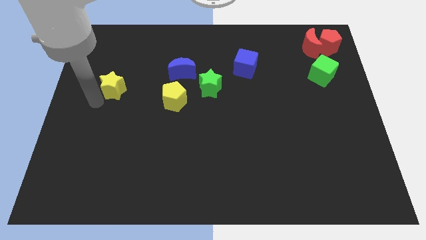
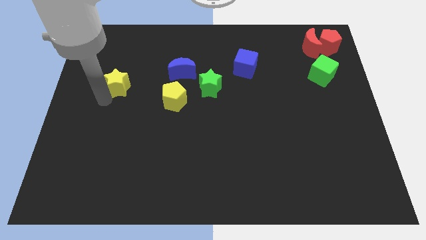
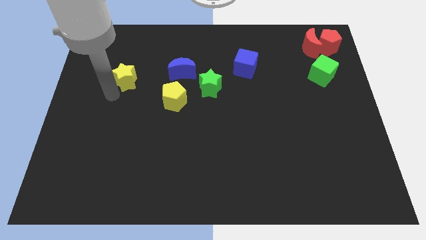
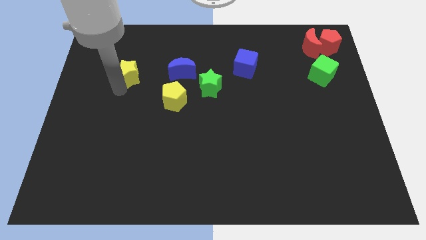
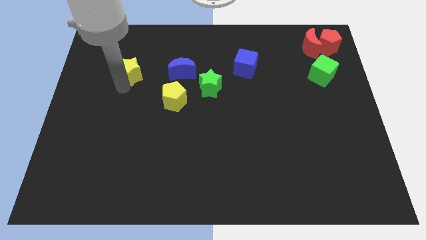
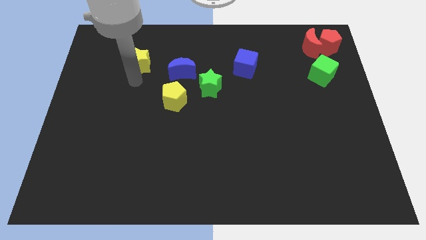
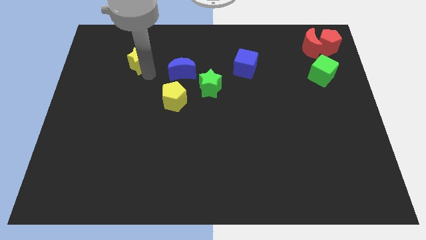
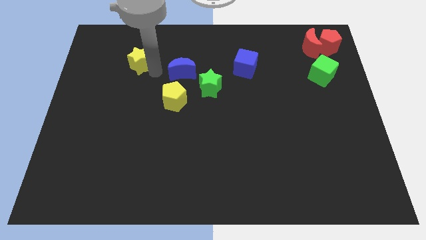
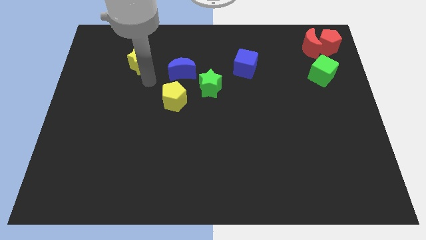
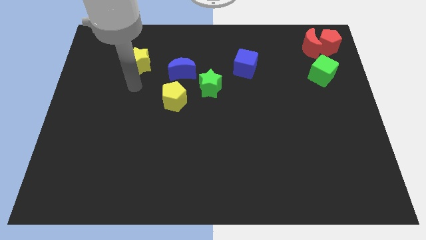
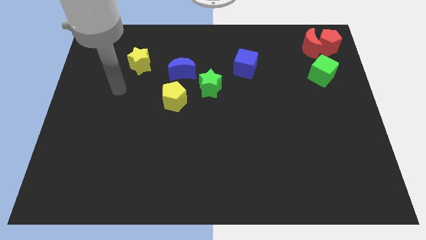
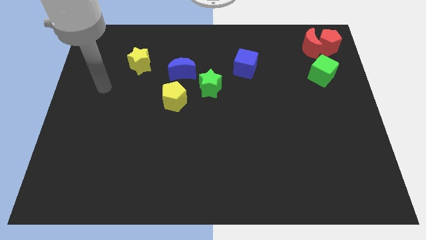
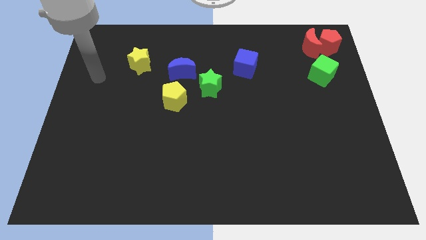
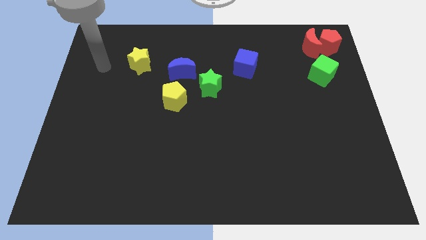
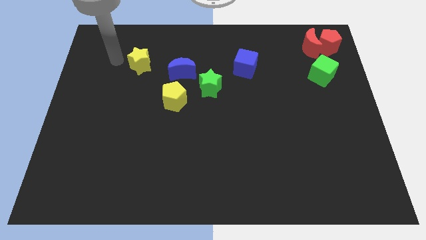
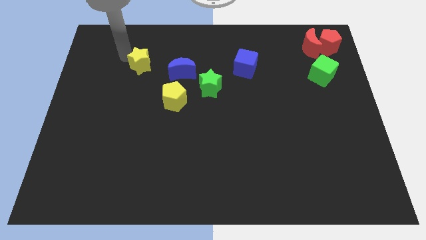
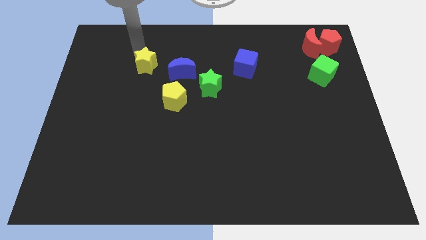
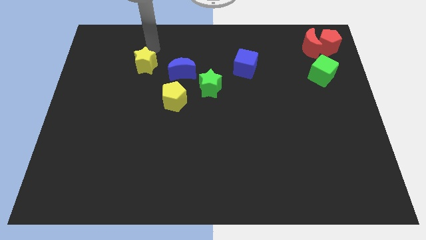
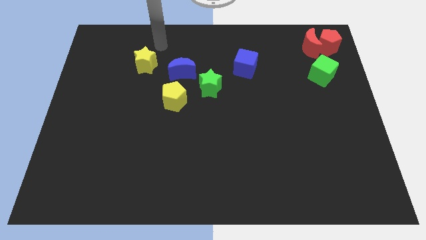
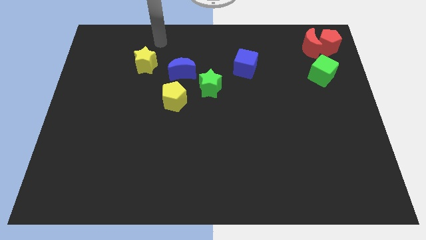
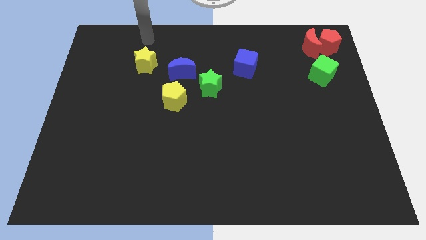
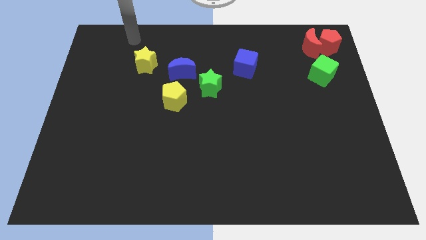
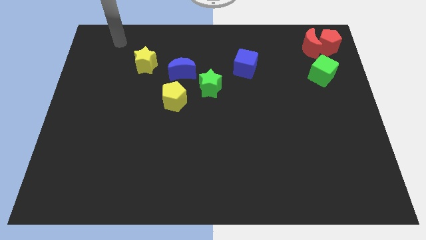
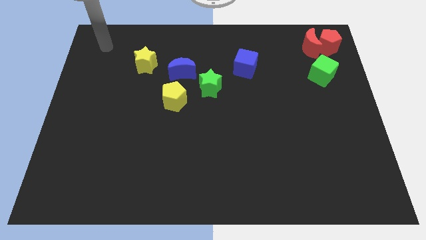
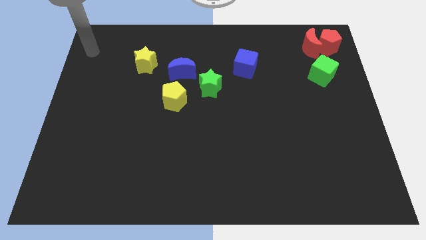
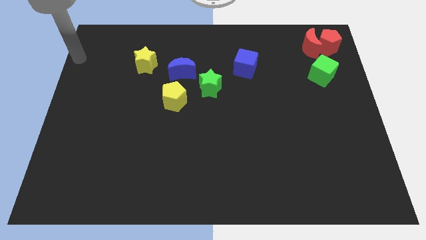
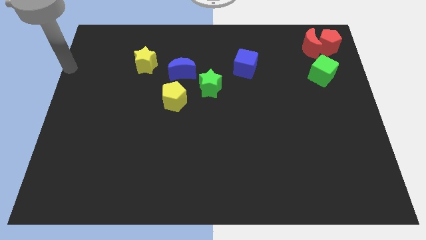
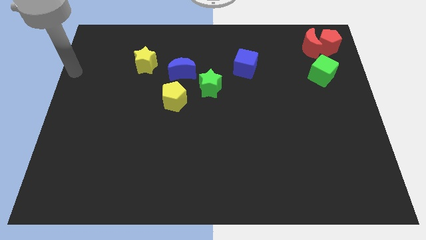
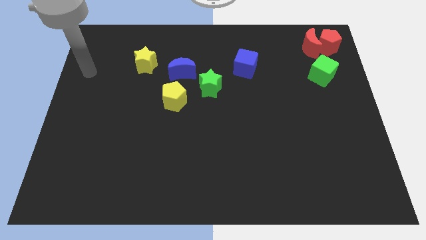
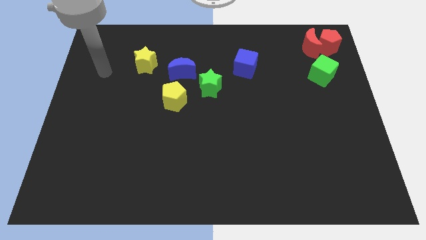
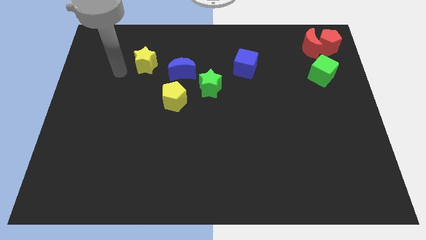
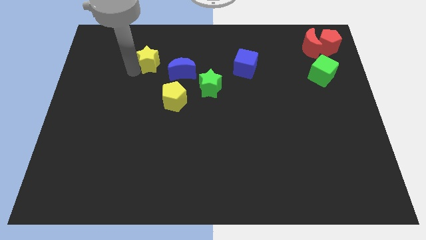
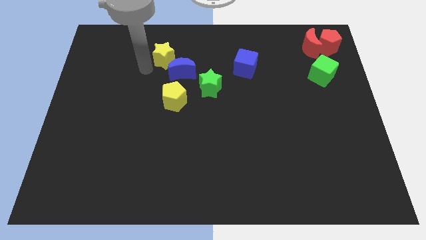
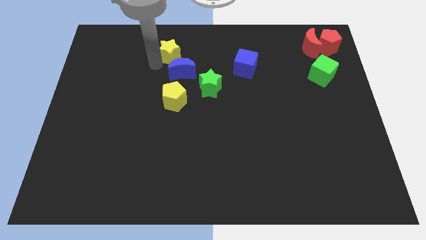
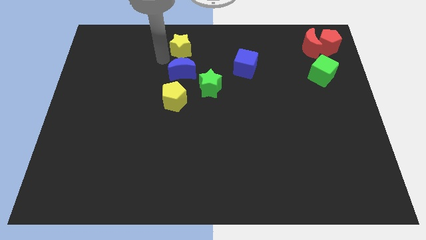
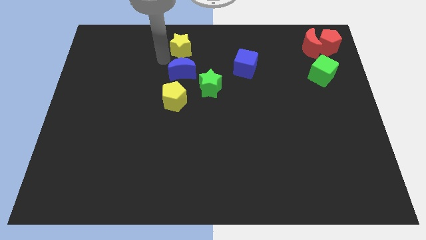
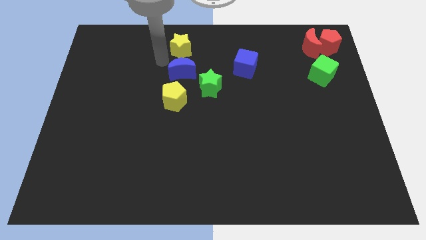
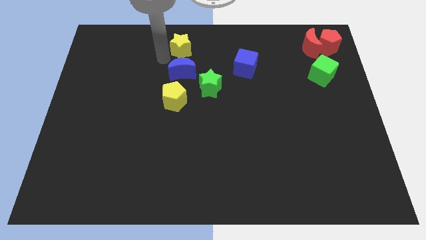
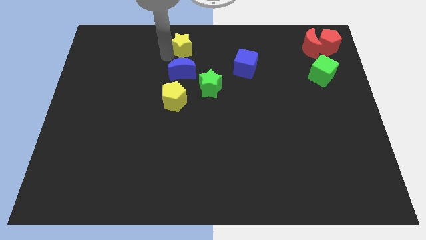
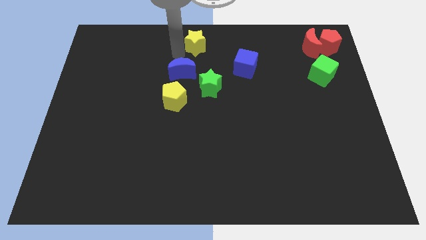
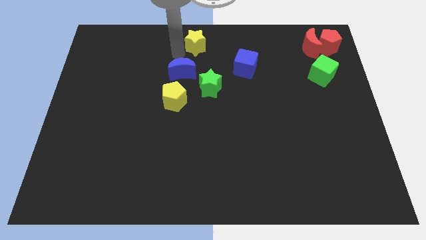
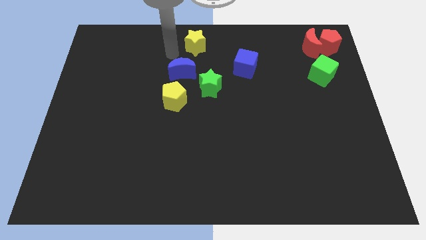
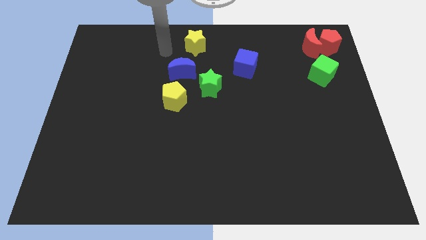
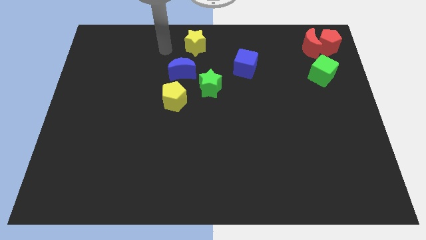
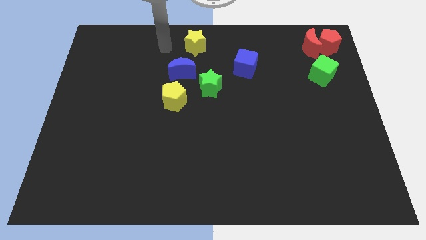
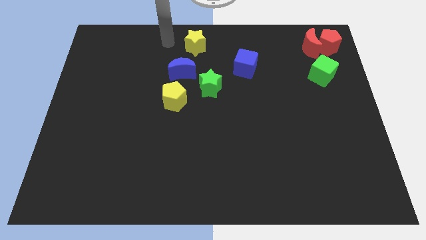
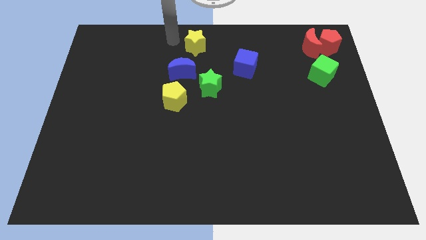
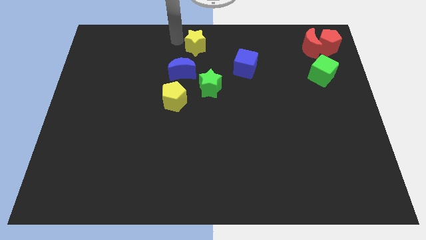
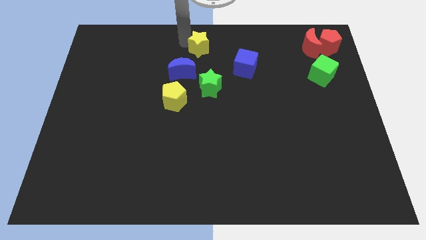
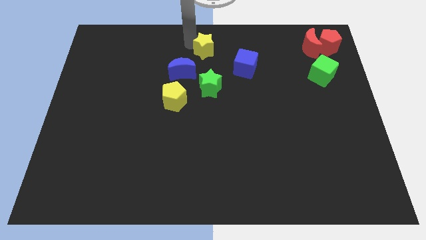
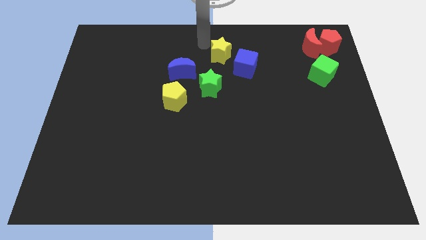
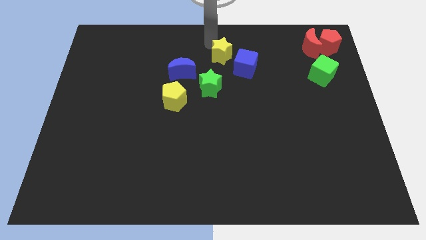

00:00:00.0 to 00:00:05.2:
move the yellow star to the top center

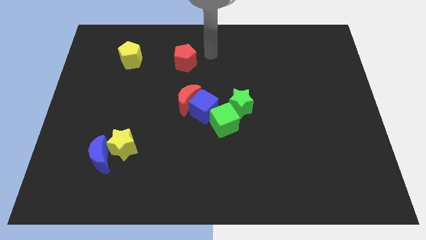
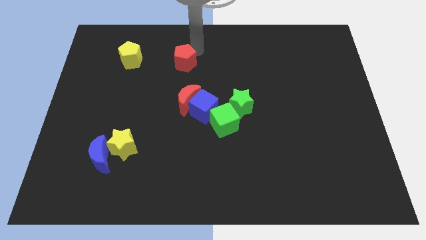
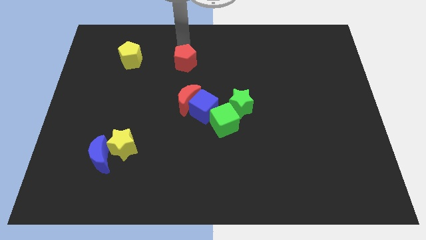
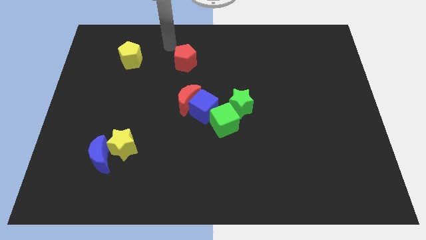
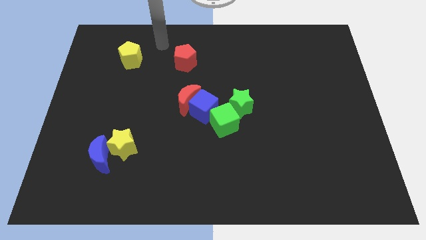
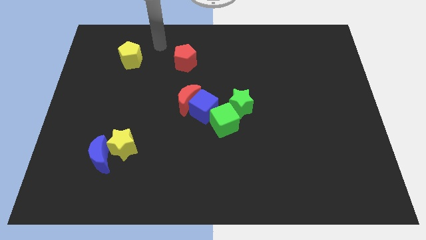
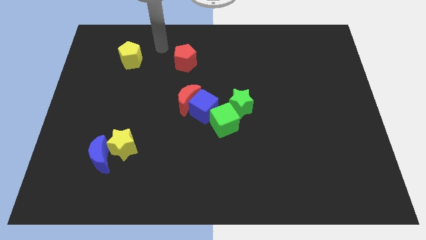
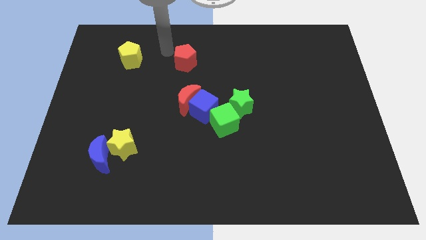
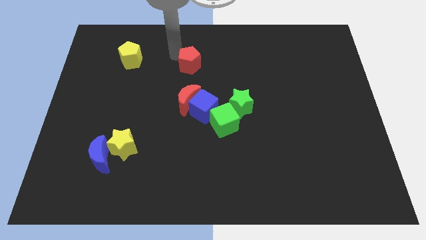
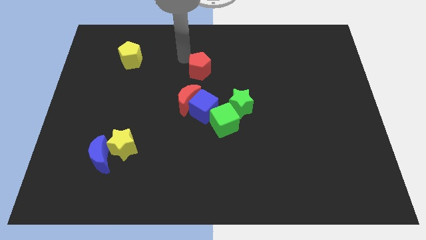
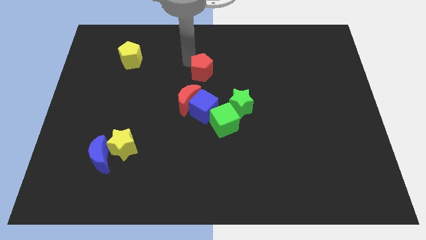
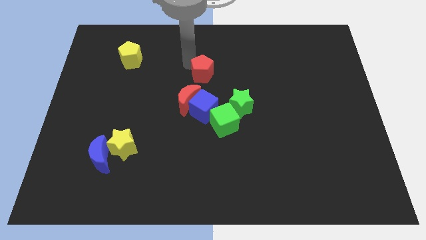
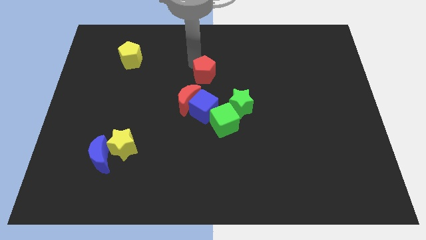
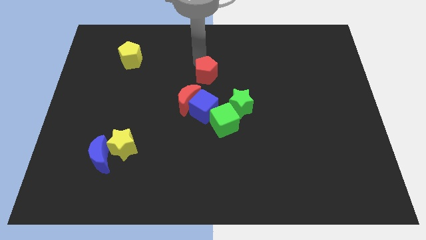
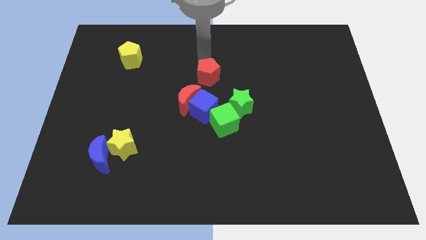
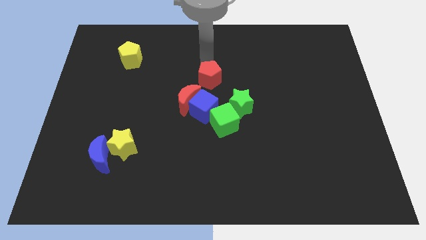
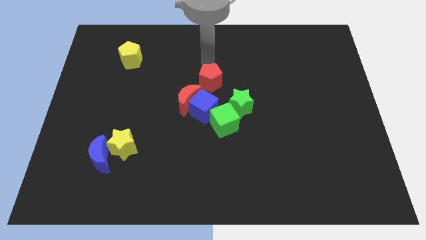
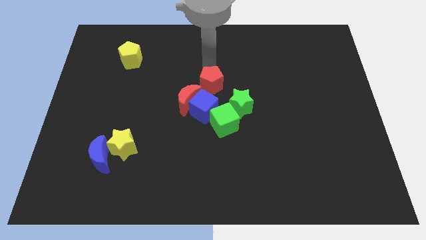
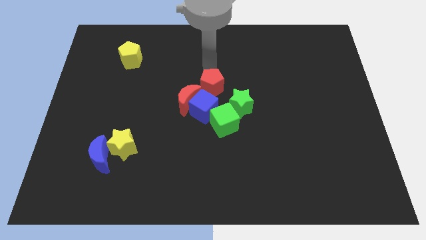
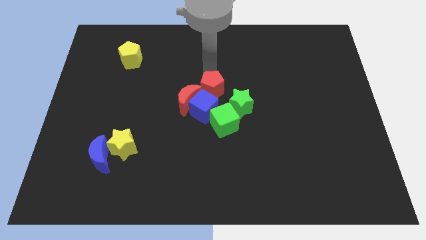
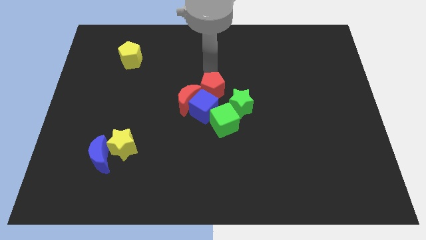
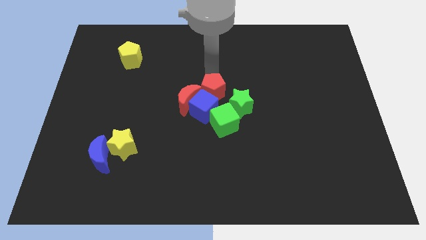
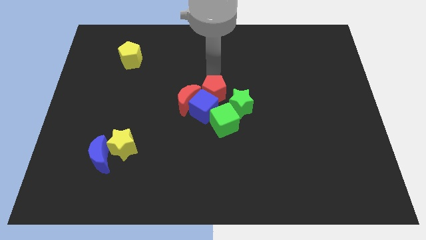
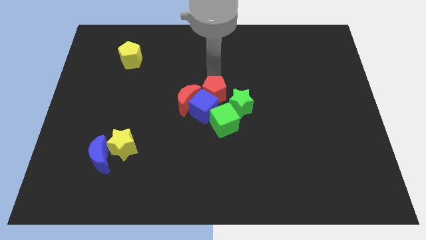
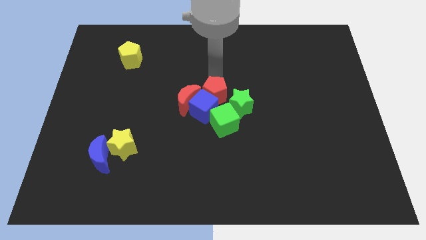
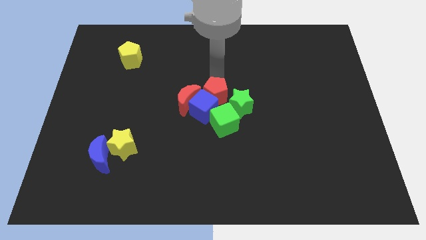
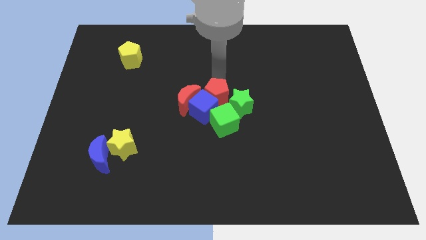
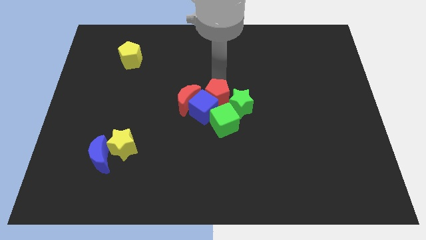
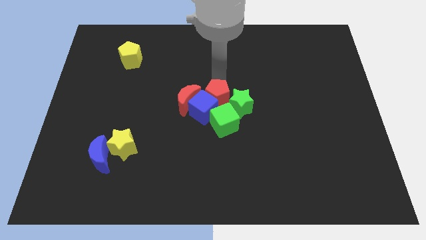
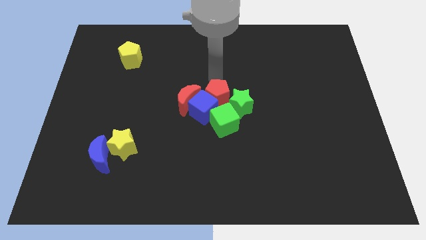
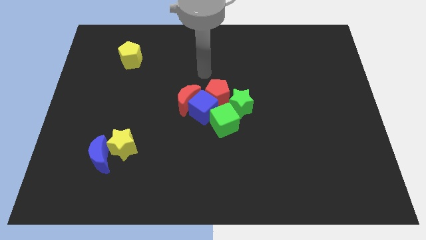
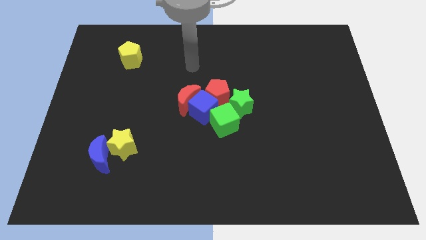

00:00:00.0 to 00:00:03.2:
move the red pentagon away from the horizontal right of the yellow pentagon

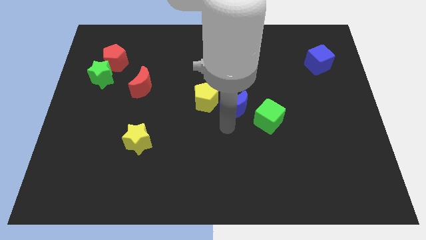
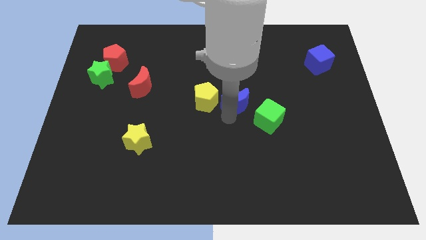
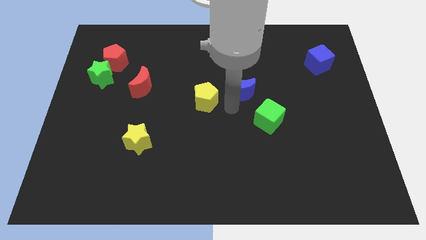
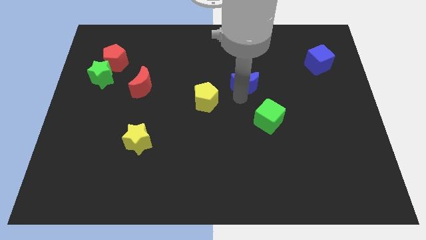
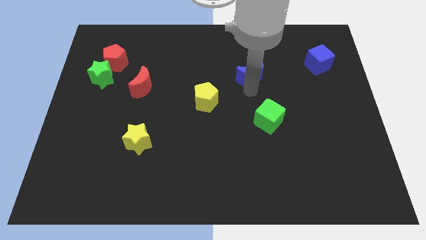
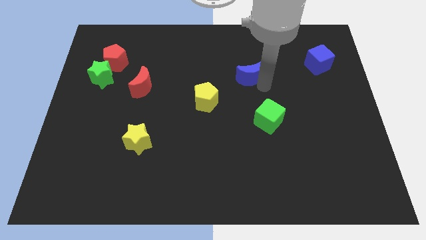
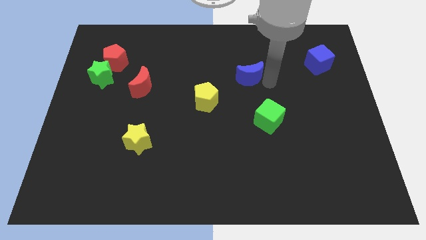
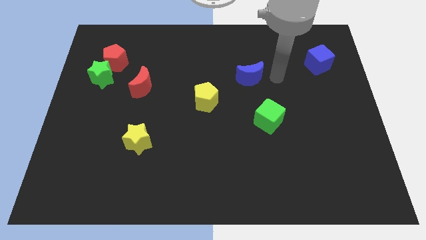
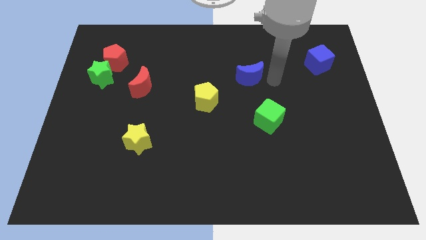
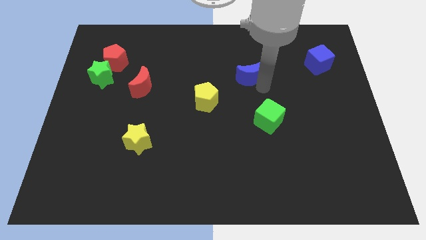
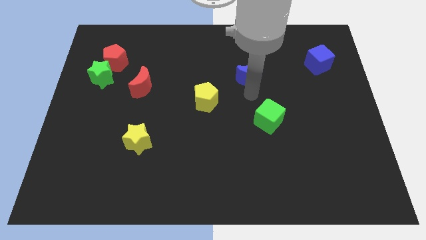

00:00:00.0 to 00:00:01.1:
move the blue moon away from the right side of the yellow pentagon
